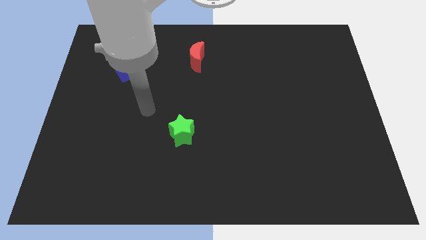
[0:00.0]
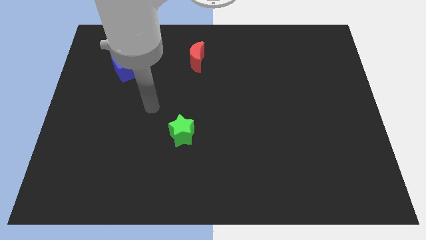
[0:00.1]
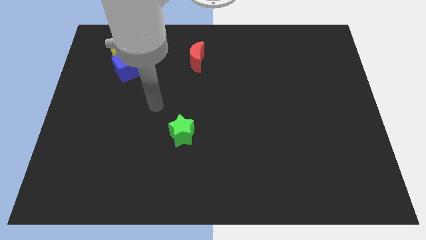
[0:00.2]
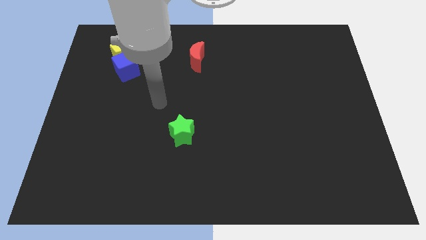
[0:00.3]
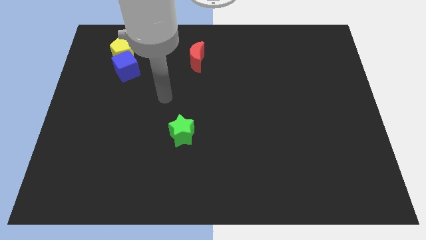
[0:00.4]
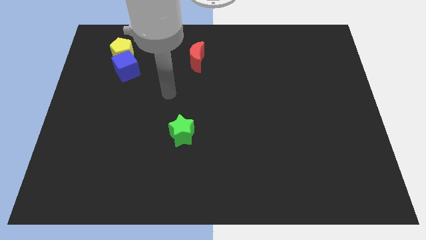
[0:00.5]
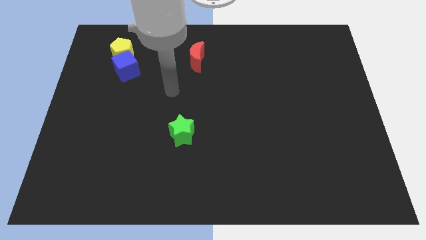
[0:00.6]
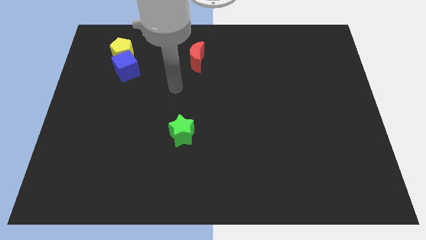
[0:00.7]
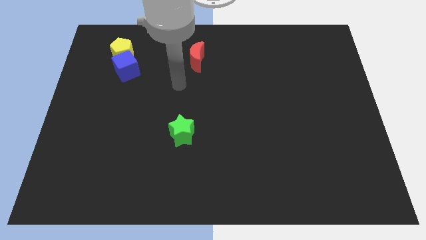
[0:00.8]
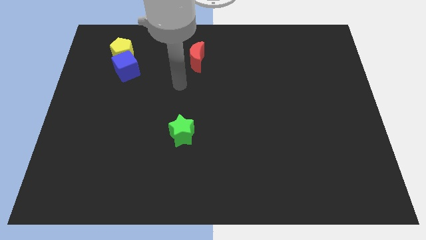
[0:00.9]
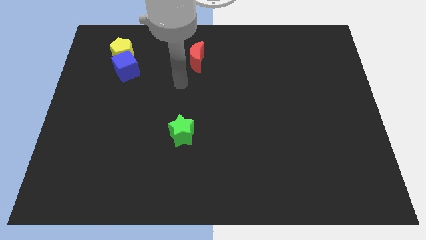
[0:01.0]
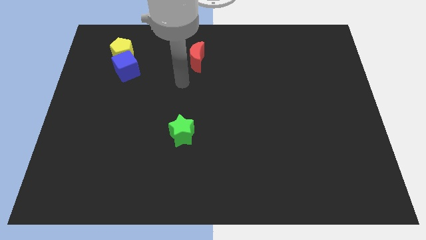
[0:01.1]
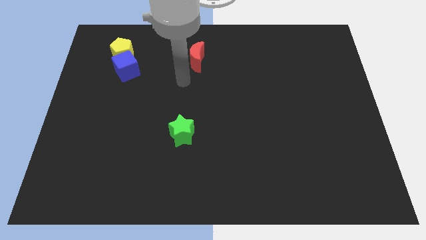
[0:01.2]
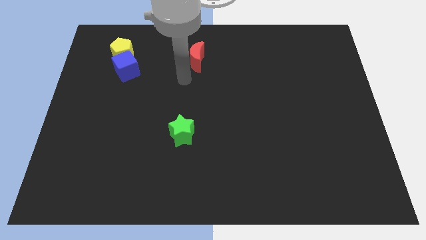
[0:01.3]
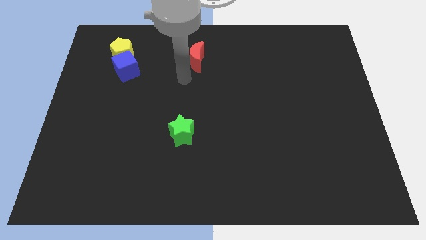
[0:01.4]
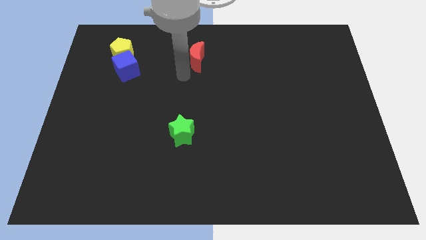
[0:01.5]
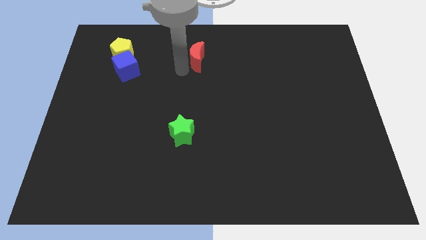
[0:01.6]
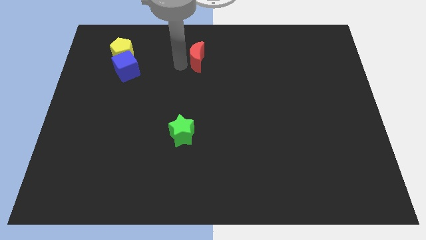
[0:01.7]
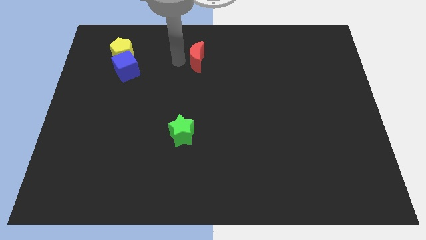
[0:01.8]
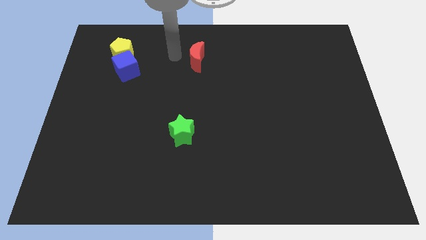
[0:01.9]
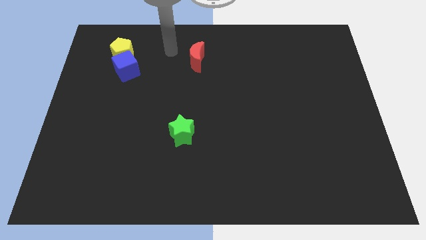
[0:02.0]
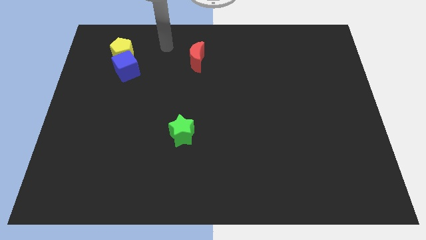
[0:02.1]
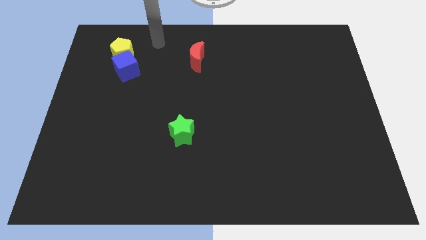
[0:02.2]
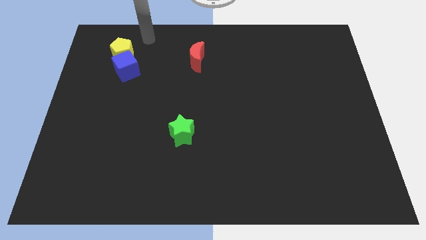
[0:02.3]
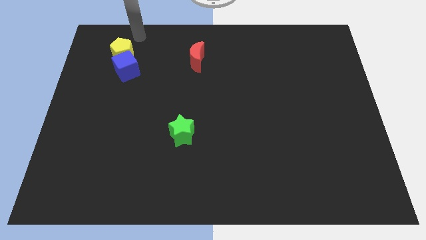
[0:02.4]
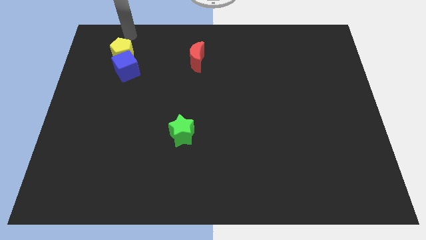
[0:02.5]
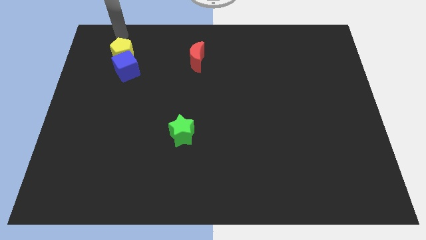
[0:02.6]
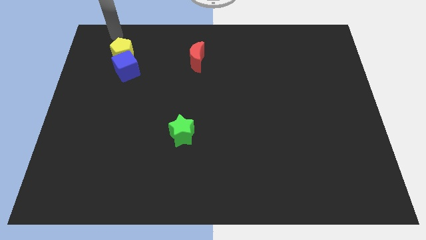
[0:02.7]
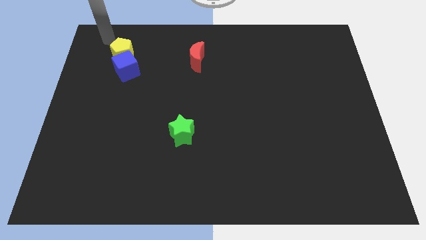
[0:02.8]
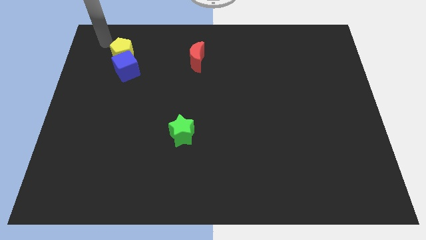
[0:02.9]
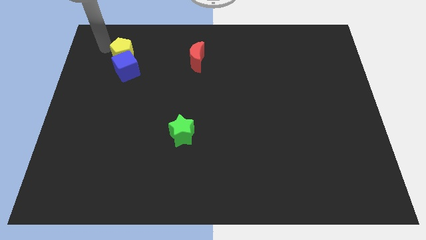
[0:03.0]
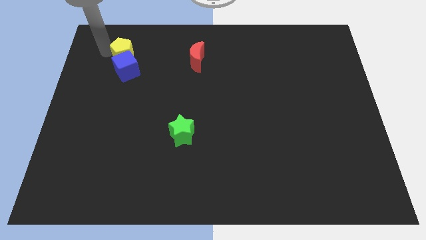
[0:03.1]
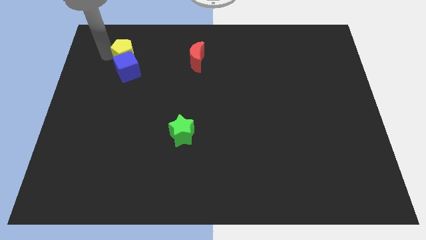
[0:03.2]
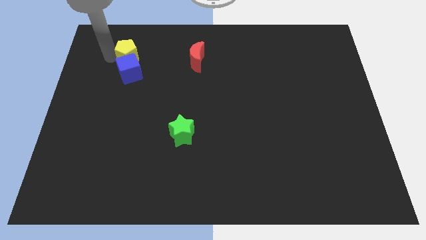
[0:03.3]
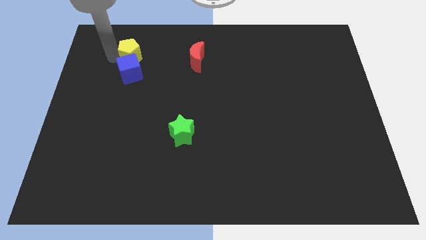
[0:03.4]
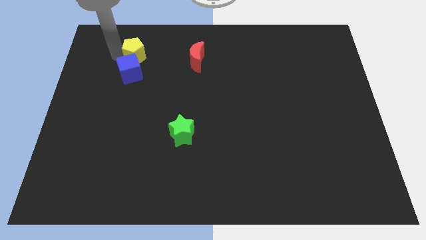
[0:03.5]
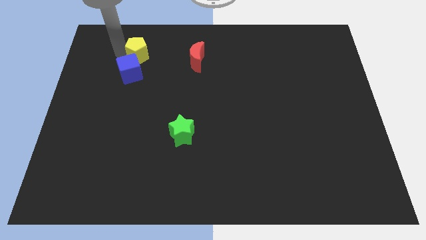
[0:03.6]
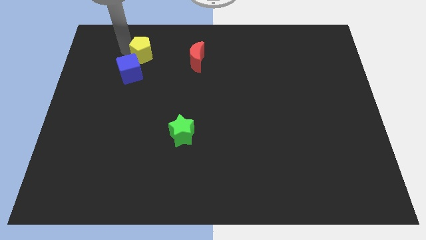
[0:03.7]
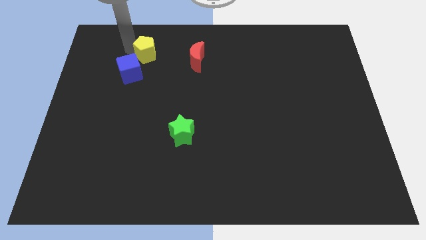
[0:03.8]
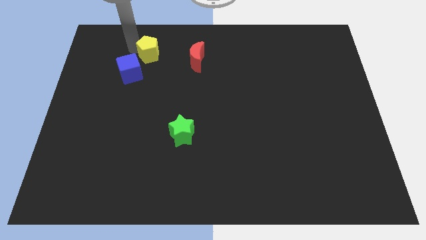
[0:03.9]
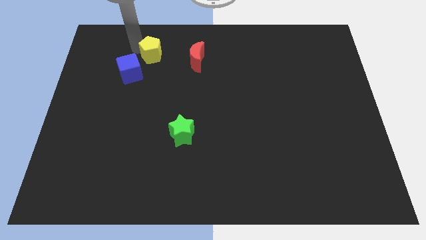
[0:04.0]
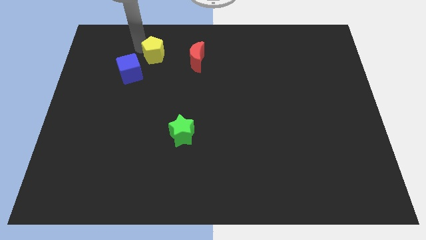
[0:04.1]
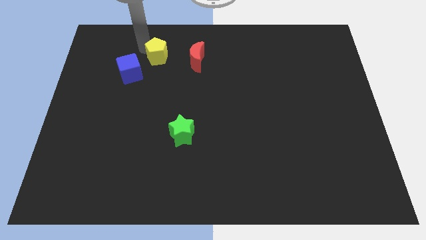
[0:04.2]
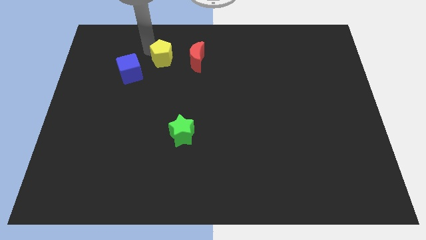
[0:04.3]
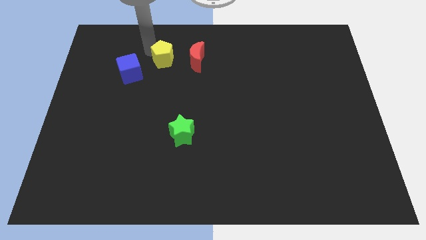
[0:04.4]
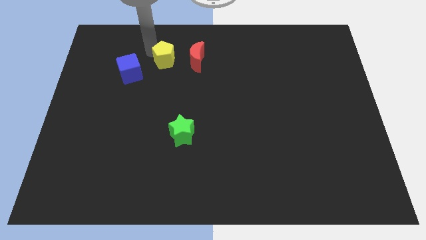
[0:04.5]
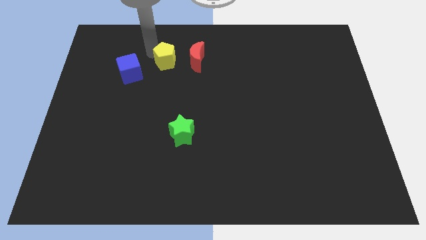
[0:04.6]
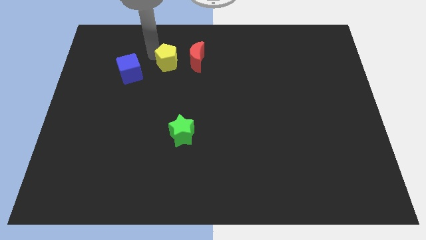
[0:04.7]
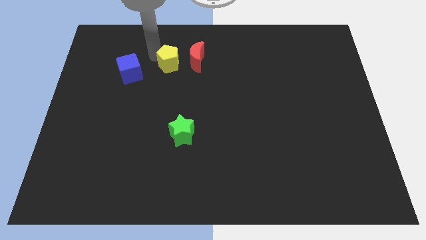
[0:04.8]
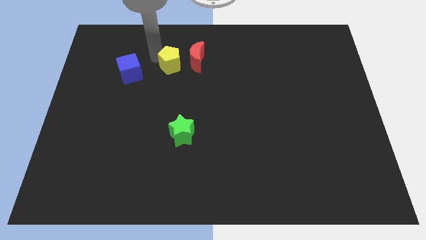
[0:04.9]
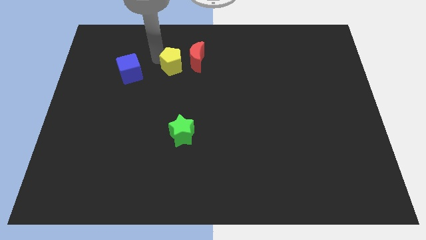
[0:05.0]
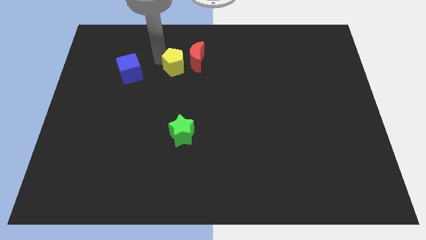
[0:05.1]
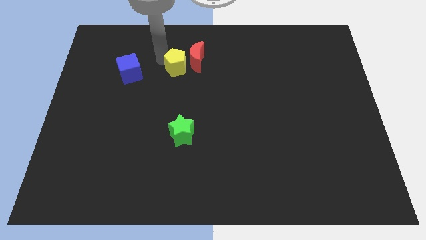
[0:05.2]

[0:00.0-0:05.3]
slide the yellow pentagon next to the red block

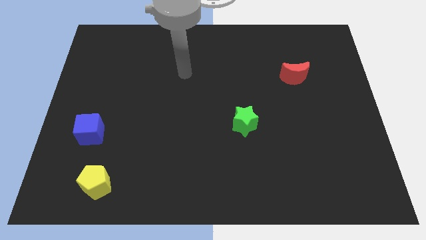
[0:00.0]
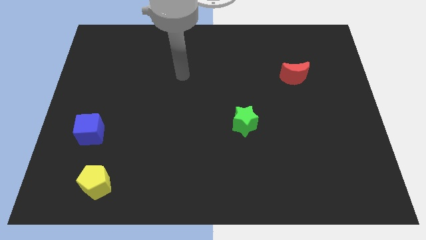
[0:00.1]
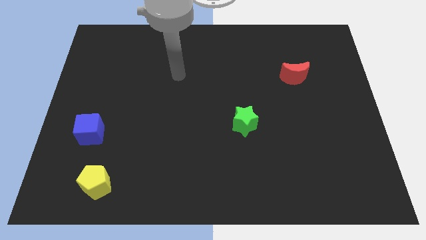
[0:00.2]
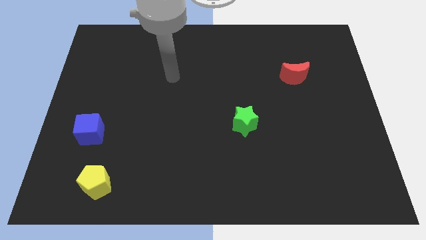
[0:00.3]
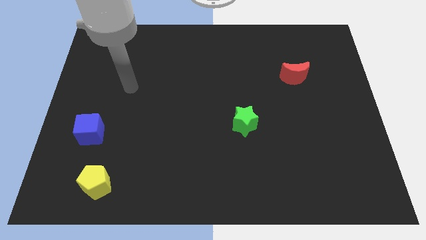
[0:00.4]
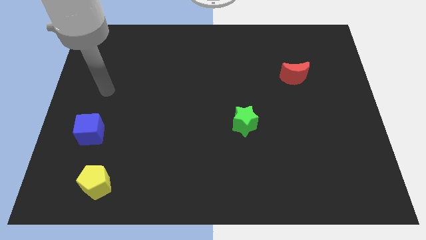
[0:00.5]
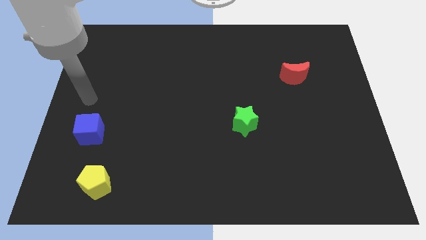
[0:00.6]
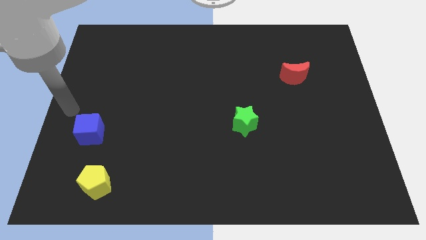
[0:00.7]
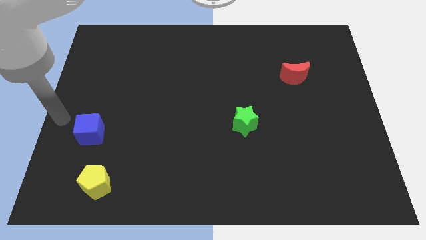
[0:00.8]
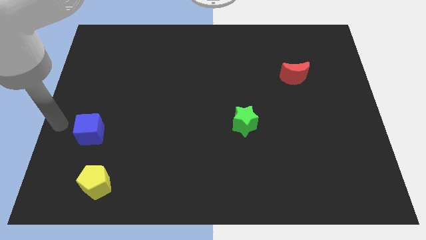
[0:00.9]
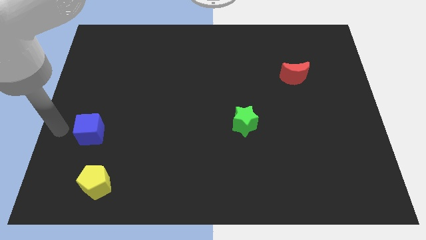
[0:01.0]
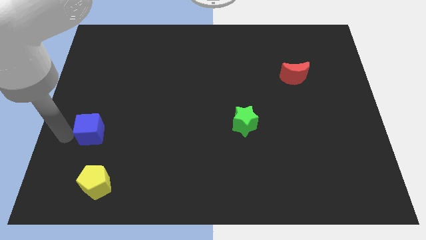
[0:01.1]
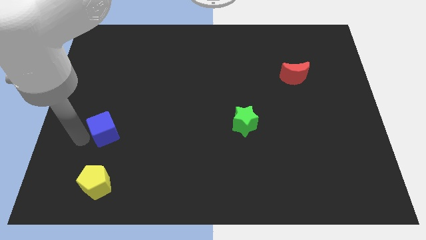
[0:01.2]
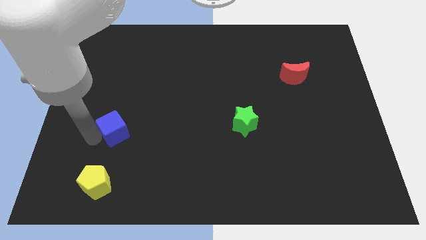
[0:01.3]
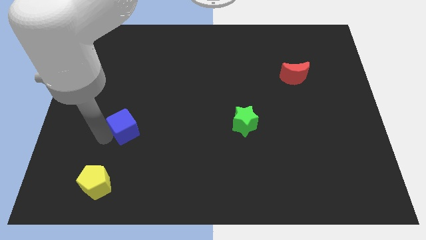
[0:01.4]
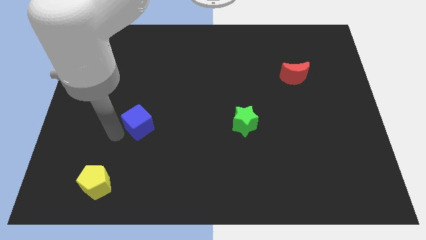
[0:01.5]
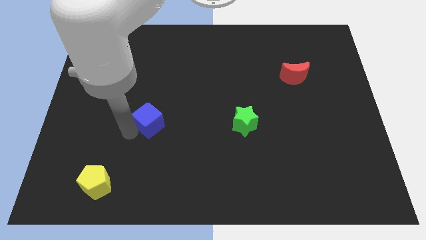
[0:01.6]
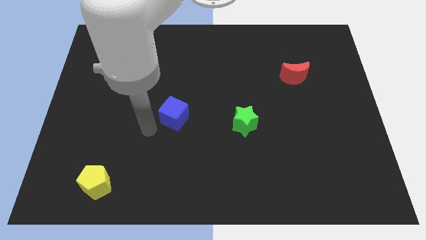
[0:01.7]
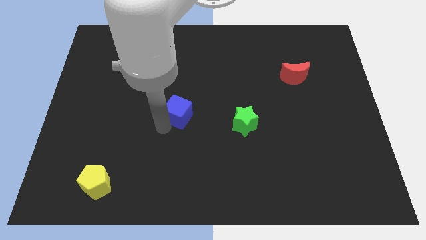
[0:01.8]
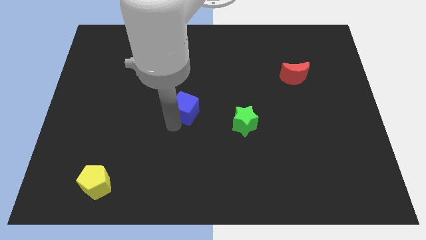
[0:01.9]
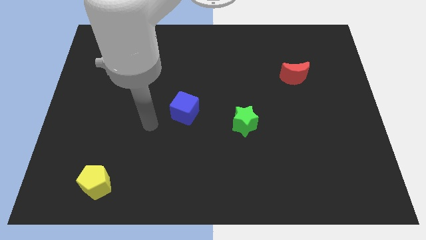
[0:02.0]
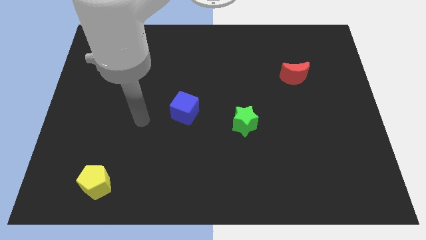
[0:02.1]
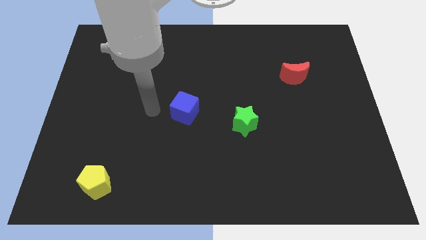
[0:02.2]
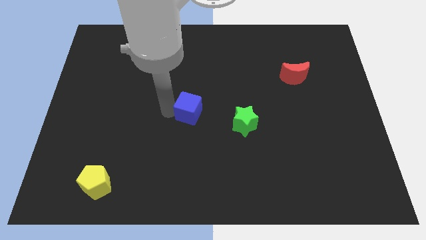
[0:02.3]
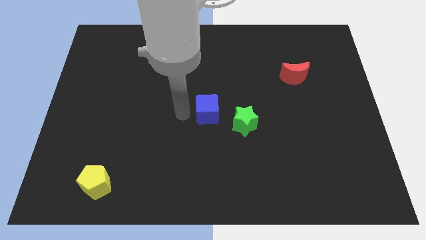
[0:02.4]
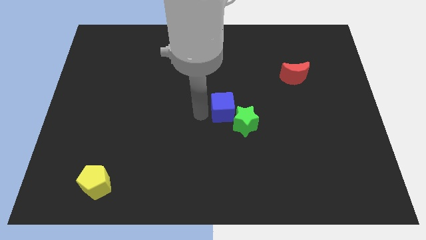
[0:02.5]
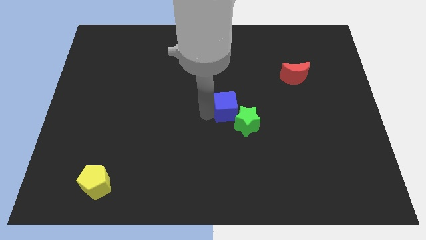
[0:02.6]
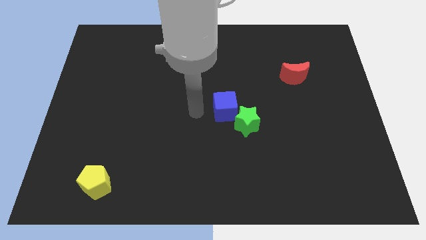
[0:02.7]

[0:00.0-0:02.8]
slide the cube close to the green star

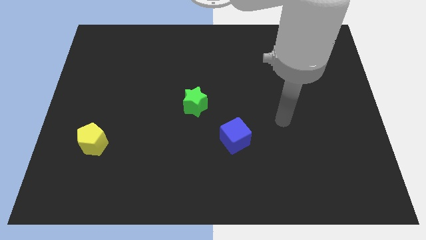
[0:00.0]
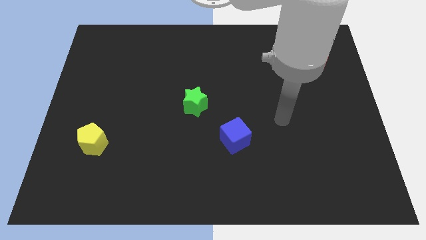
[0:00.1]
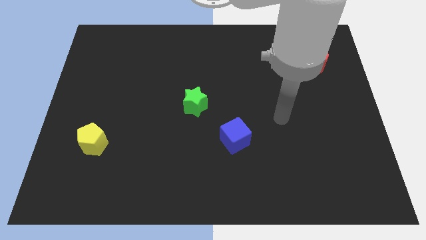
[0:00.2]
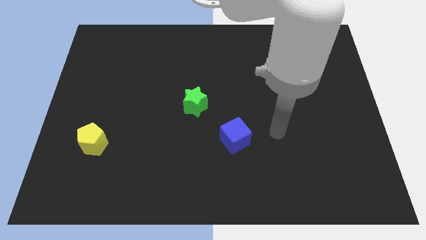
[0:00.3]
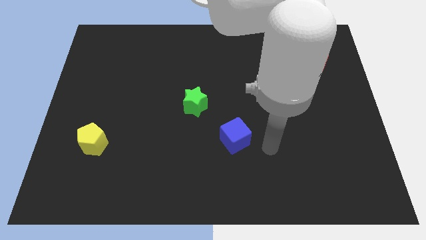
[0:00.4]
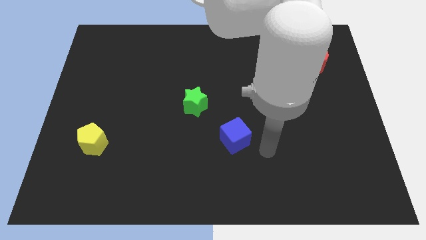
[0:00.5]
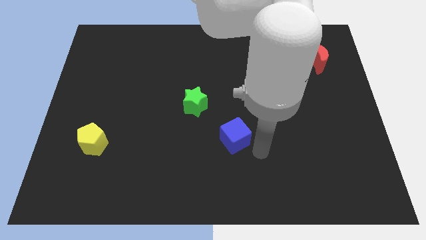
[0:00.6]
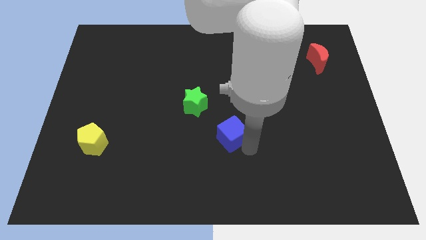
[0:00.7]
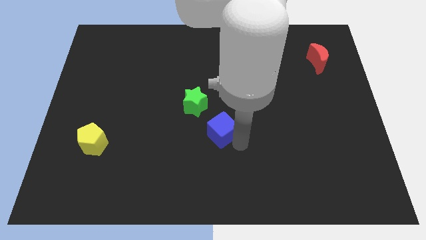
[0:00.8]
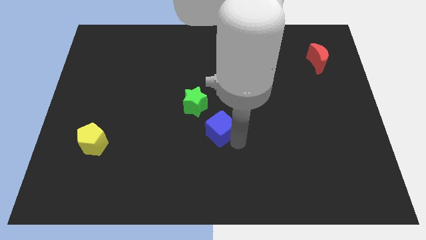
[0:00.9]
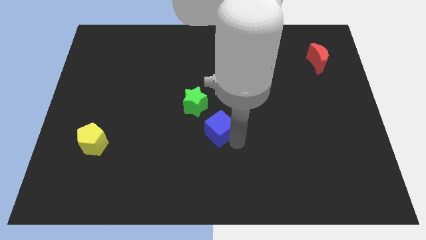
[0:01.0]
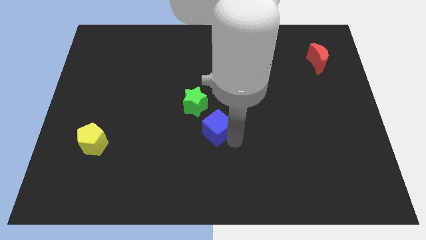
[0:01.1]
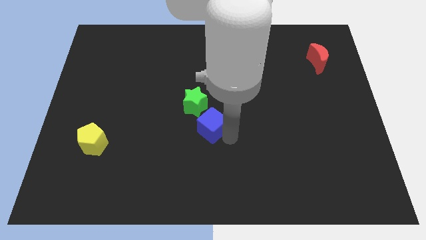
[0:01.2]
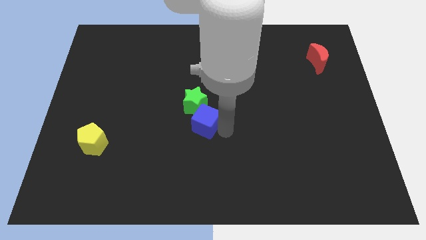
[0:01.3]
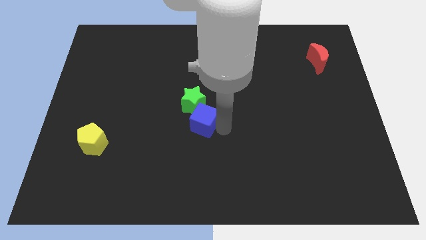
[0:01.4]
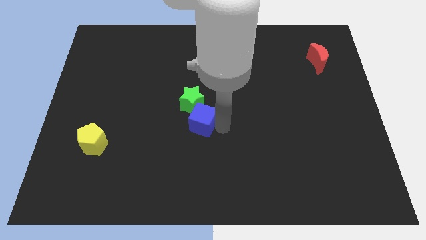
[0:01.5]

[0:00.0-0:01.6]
push the cube next to the star
